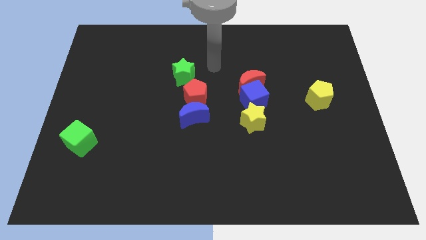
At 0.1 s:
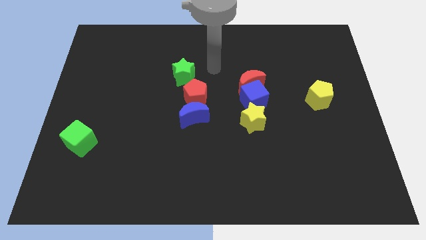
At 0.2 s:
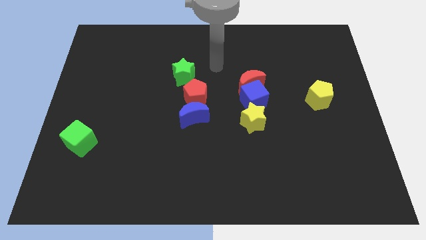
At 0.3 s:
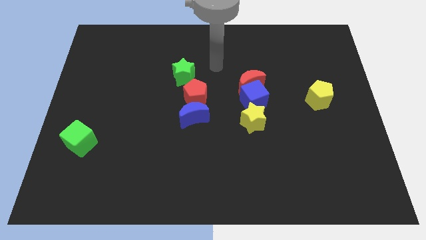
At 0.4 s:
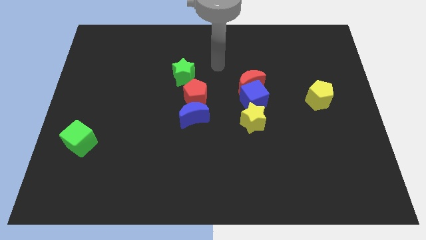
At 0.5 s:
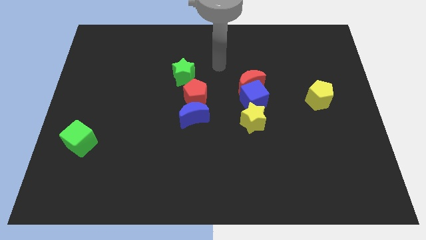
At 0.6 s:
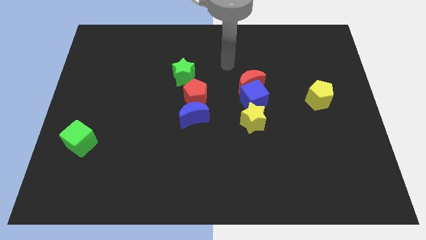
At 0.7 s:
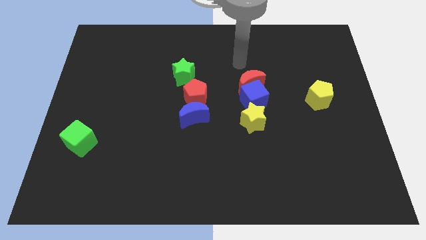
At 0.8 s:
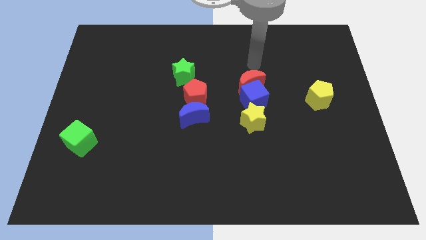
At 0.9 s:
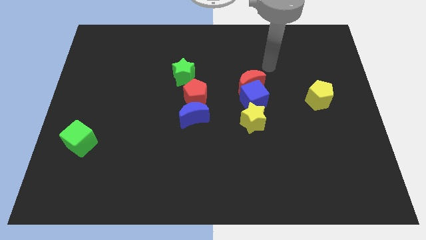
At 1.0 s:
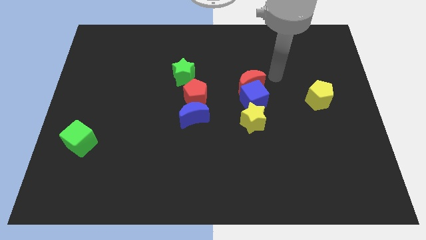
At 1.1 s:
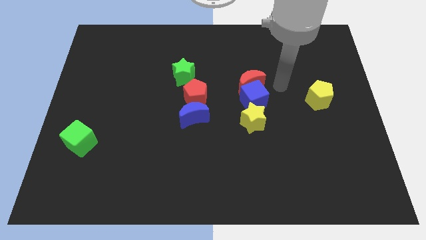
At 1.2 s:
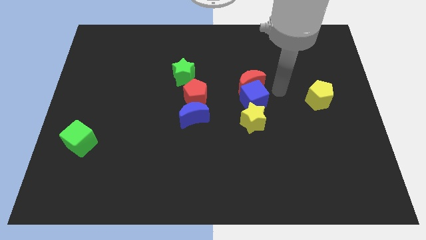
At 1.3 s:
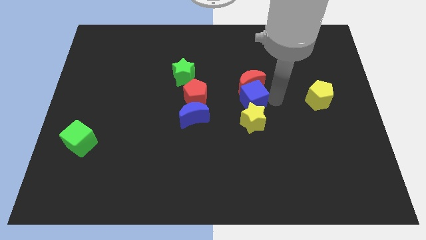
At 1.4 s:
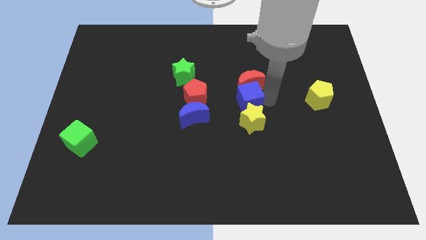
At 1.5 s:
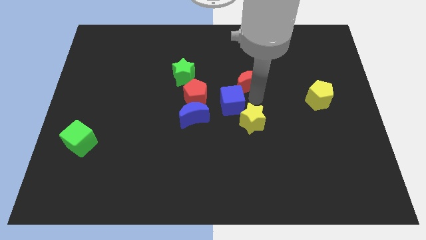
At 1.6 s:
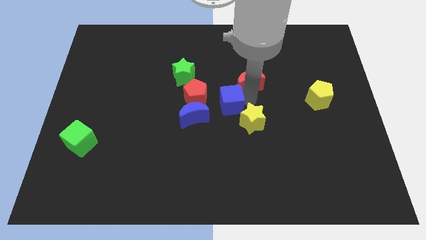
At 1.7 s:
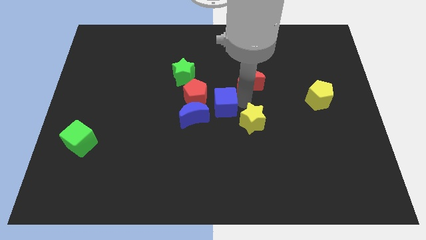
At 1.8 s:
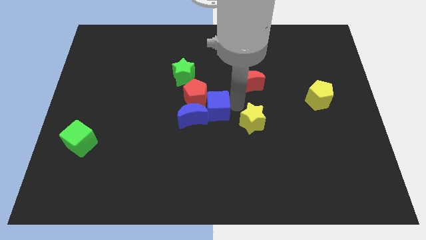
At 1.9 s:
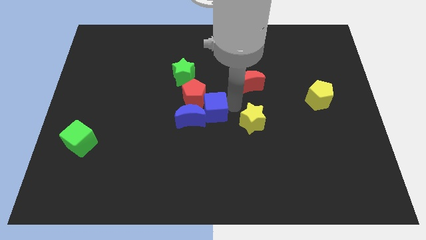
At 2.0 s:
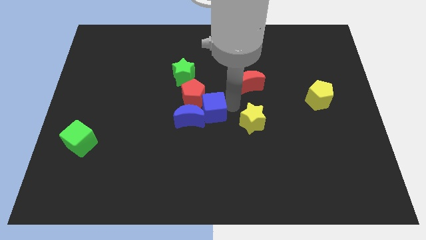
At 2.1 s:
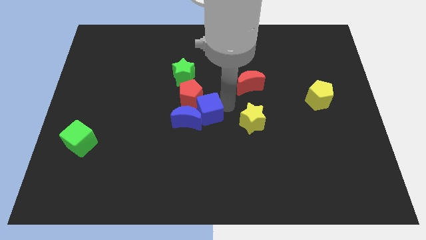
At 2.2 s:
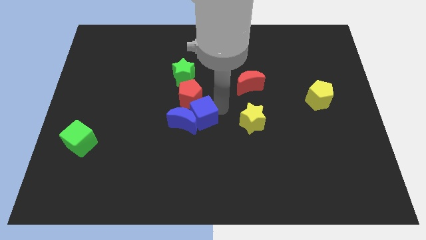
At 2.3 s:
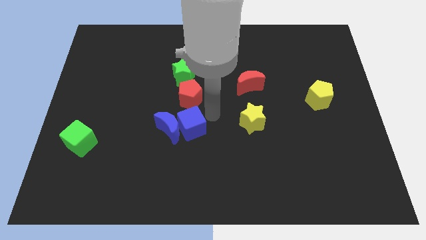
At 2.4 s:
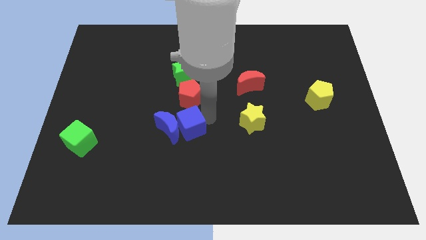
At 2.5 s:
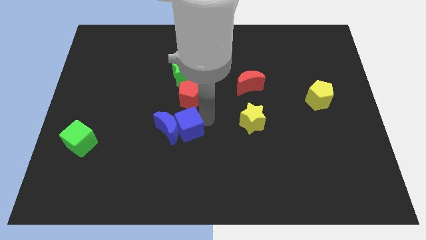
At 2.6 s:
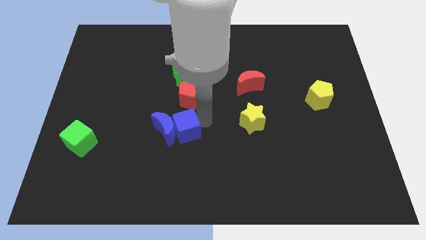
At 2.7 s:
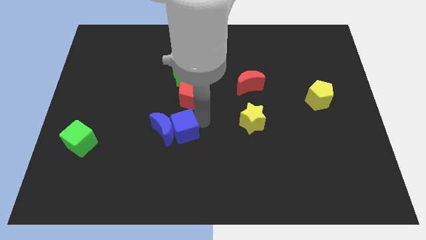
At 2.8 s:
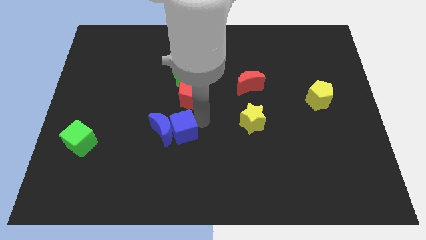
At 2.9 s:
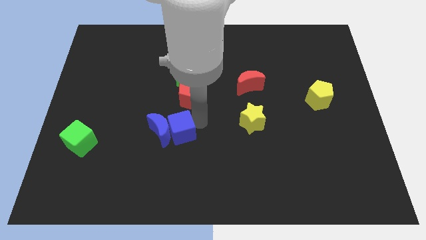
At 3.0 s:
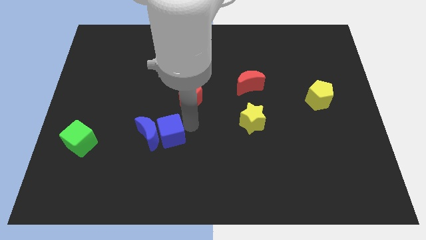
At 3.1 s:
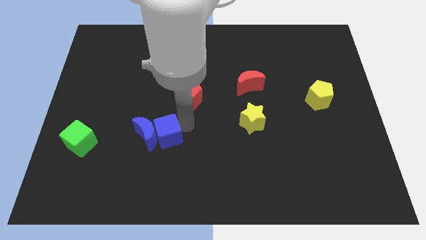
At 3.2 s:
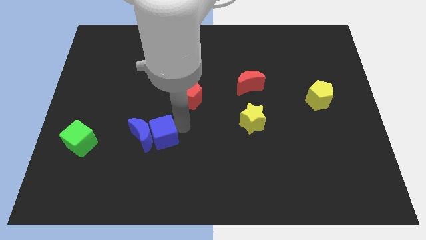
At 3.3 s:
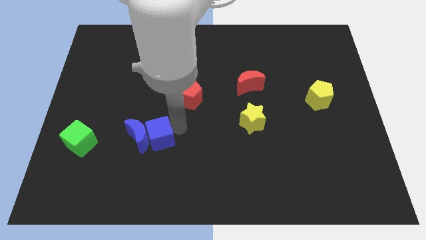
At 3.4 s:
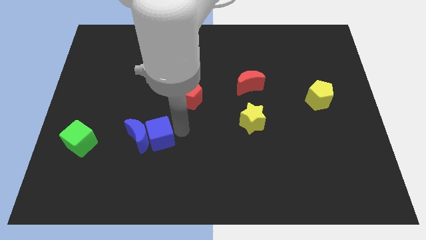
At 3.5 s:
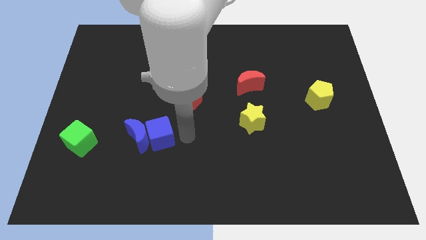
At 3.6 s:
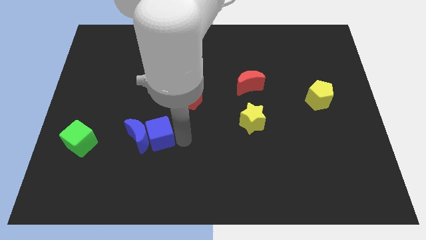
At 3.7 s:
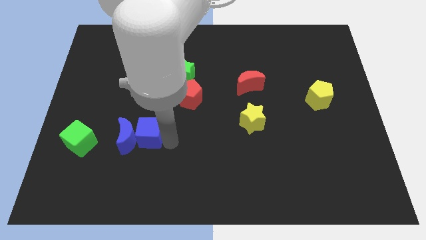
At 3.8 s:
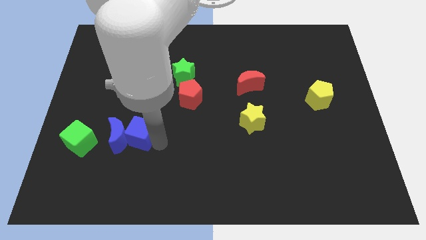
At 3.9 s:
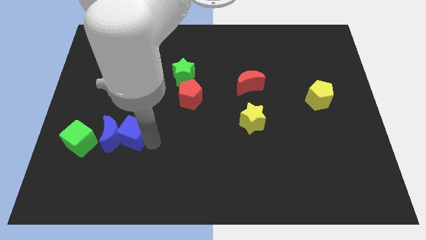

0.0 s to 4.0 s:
slide the blue cube into the blue crescent

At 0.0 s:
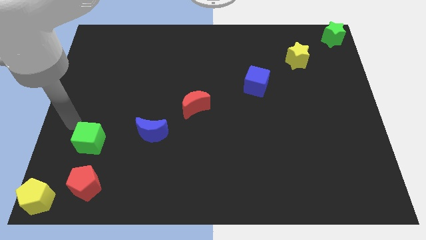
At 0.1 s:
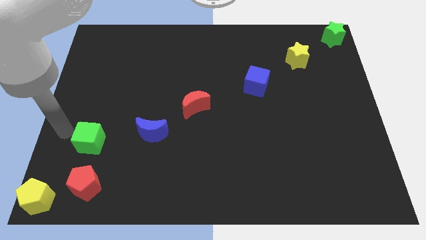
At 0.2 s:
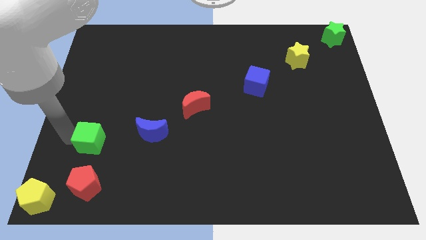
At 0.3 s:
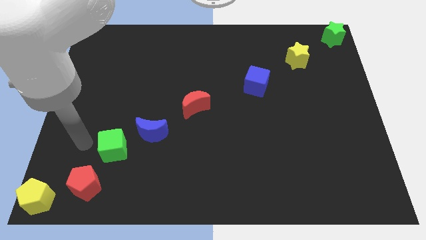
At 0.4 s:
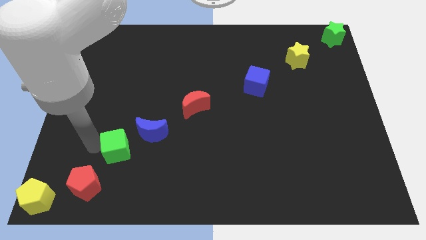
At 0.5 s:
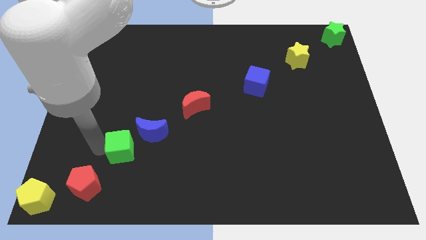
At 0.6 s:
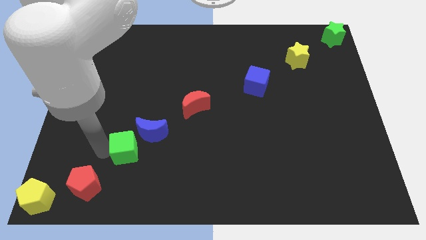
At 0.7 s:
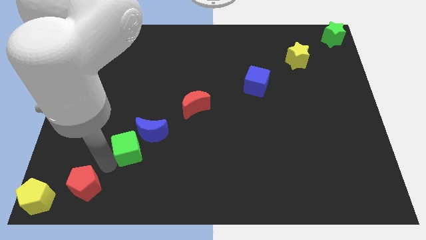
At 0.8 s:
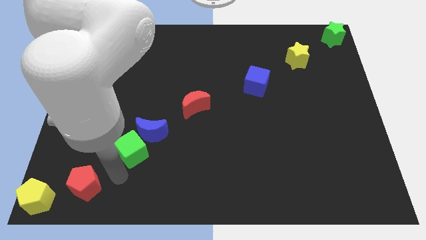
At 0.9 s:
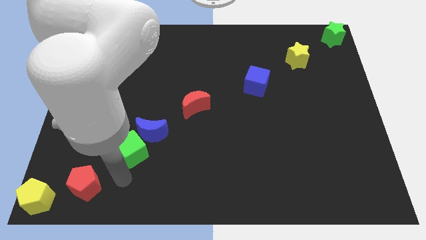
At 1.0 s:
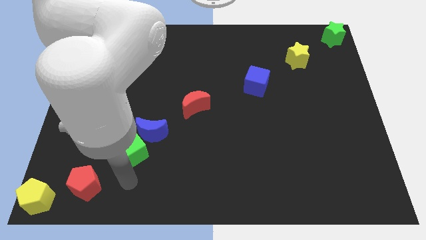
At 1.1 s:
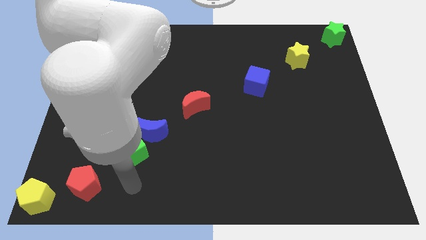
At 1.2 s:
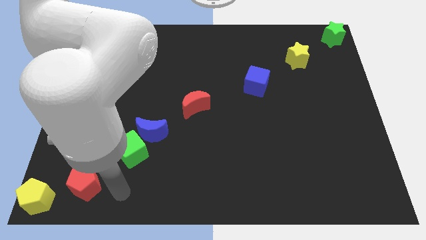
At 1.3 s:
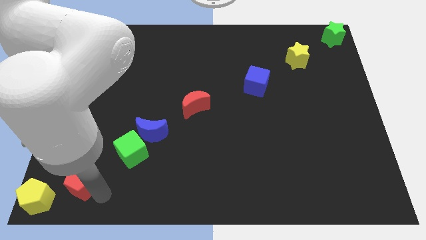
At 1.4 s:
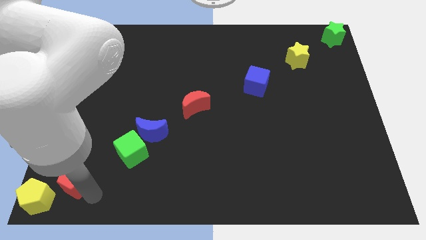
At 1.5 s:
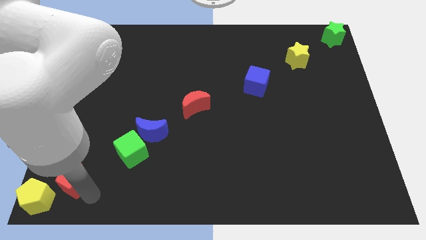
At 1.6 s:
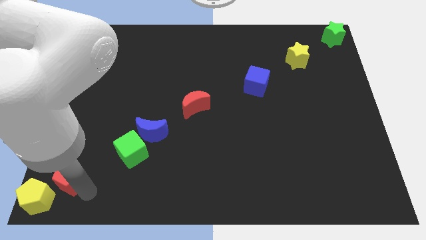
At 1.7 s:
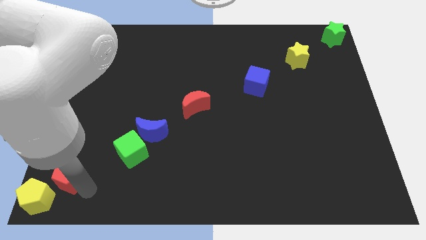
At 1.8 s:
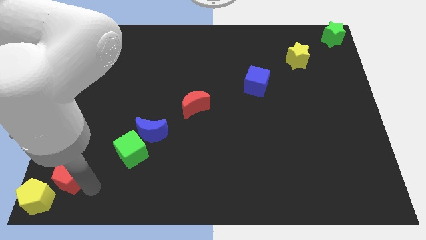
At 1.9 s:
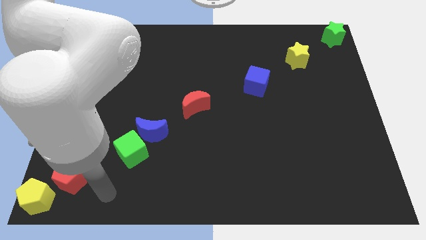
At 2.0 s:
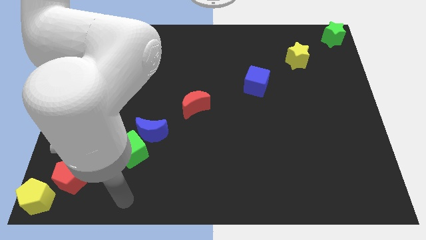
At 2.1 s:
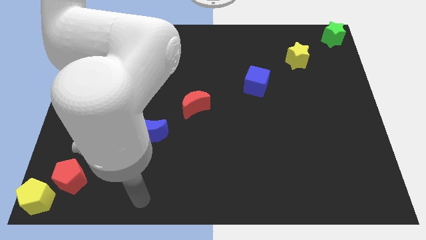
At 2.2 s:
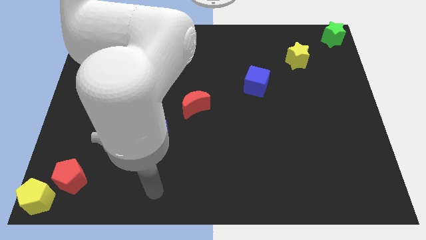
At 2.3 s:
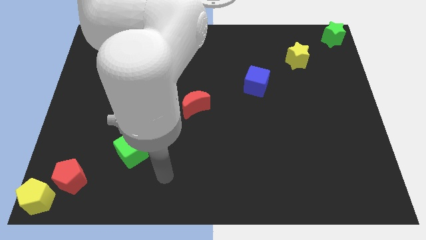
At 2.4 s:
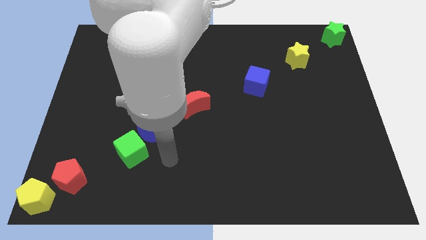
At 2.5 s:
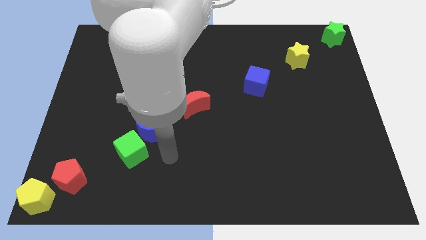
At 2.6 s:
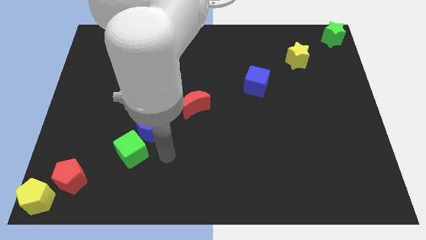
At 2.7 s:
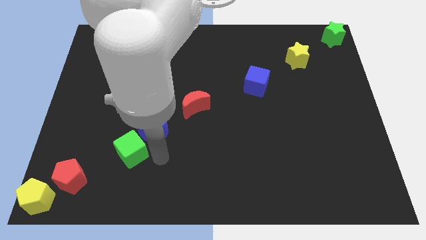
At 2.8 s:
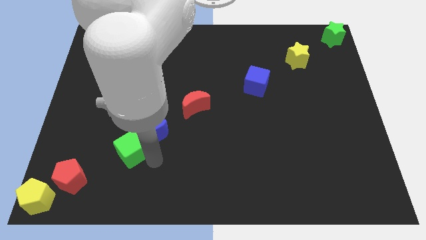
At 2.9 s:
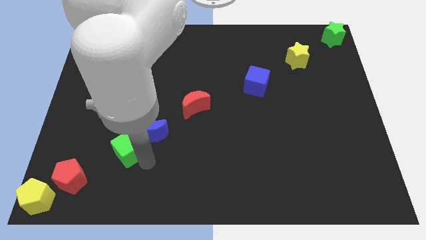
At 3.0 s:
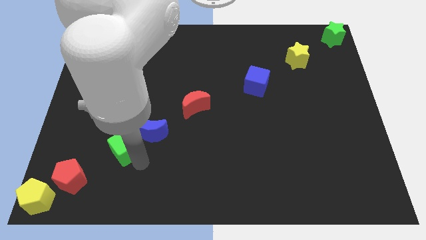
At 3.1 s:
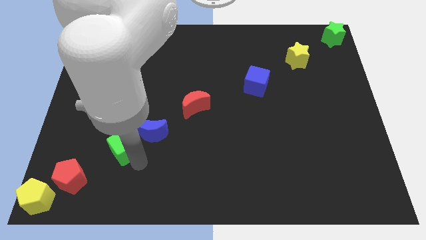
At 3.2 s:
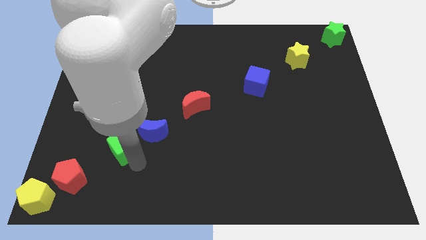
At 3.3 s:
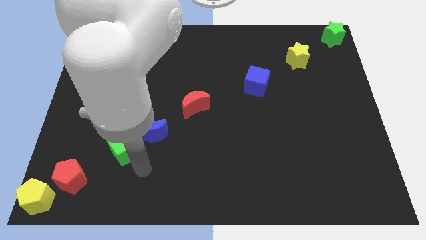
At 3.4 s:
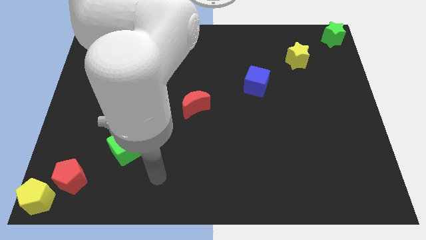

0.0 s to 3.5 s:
adjust red pentagon and the green cube to form a diagonal line

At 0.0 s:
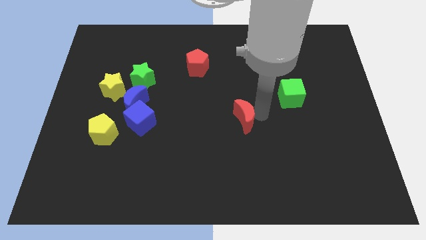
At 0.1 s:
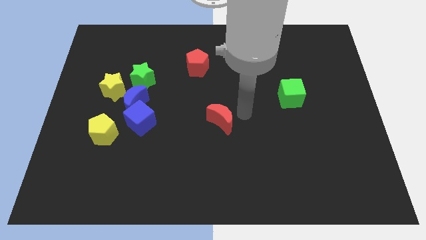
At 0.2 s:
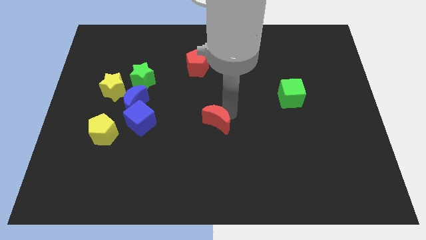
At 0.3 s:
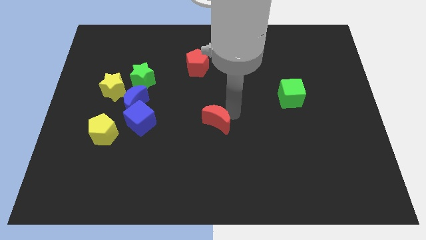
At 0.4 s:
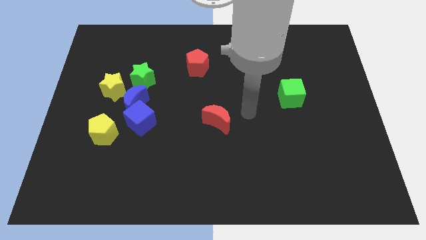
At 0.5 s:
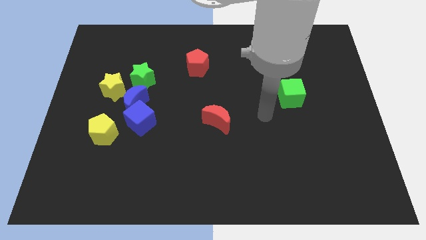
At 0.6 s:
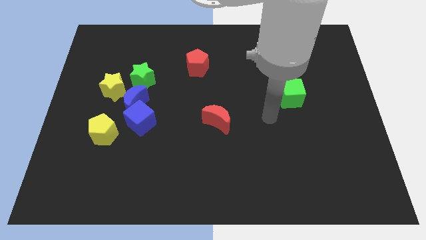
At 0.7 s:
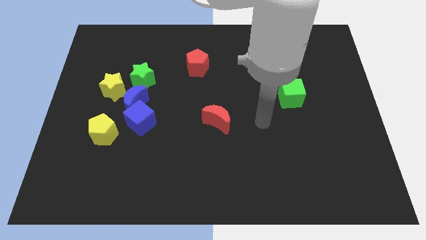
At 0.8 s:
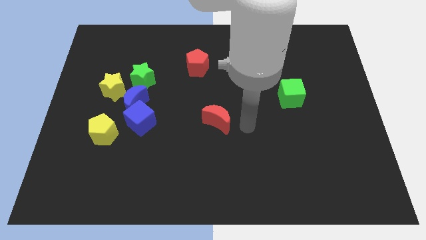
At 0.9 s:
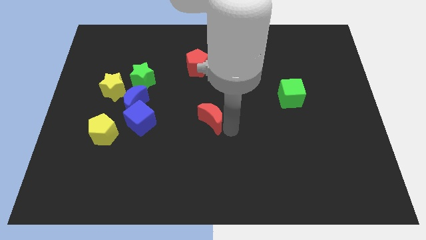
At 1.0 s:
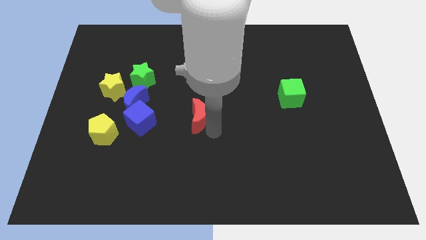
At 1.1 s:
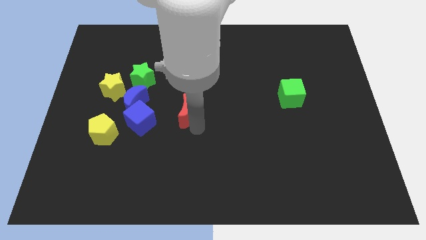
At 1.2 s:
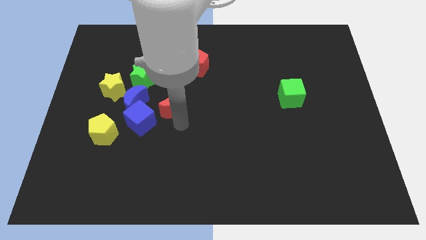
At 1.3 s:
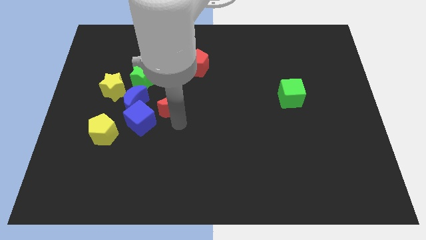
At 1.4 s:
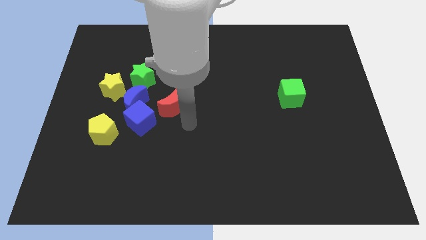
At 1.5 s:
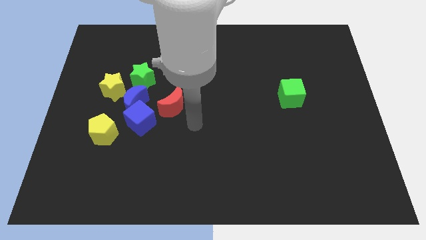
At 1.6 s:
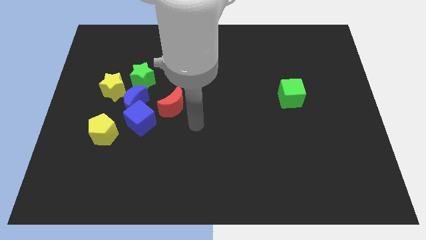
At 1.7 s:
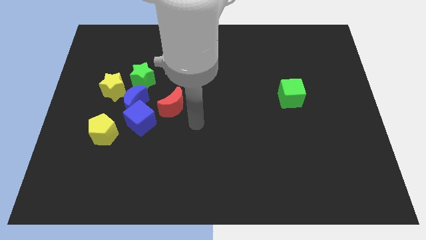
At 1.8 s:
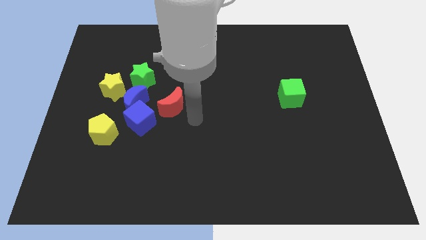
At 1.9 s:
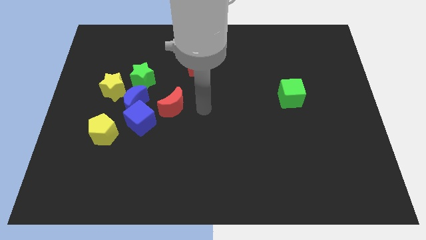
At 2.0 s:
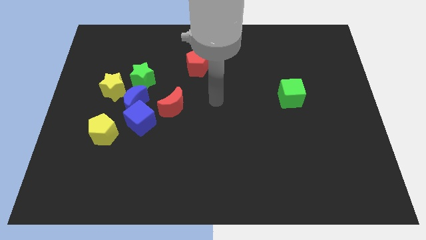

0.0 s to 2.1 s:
move red moon towards blue cube
